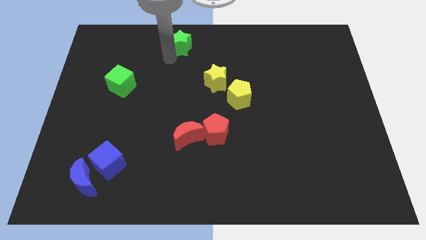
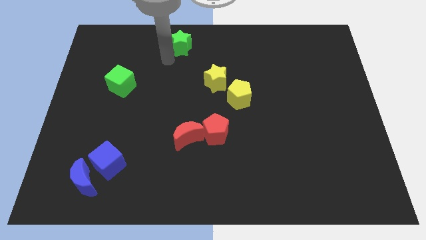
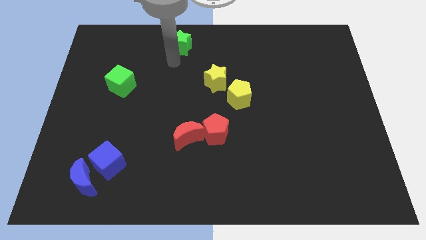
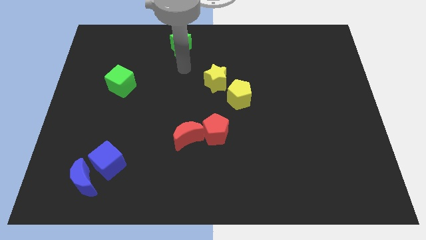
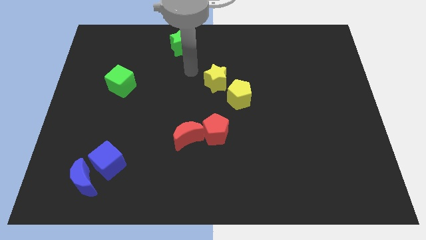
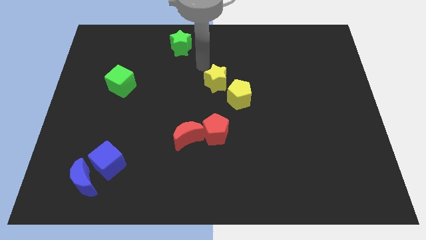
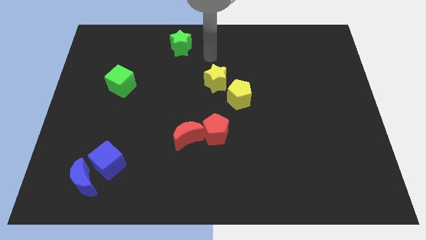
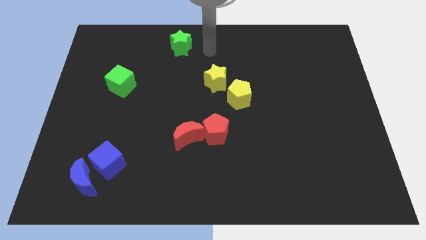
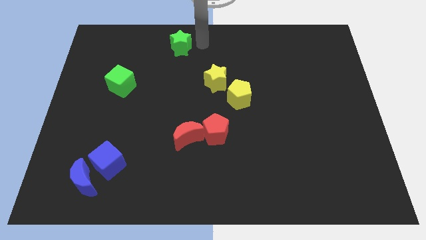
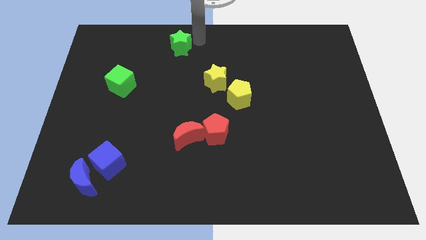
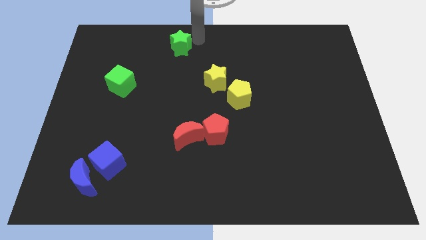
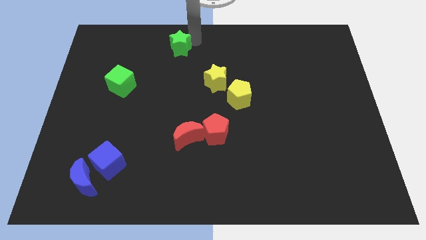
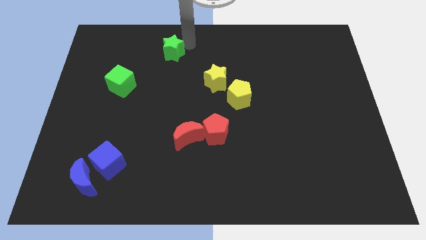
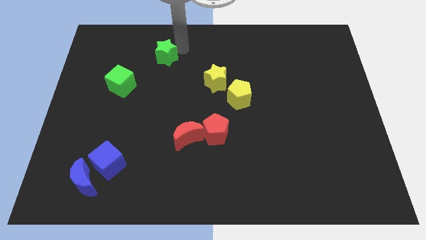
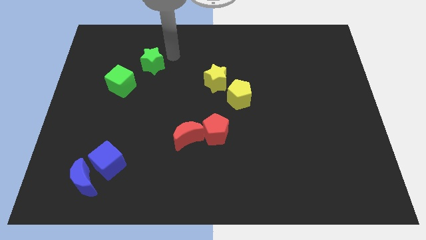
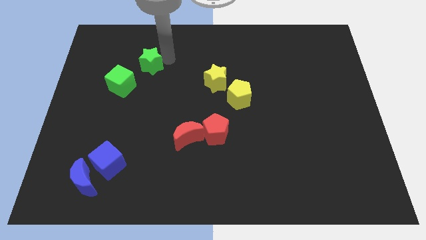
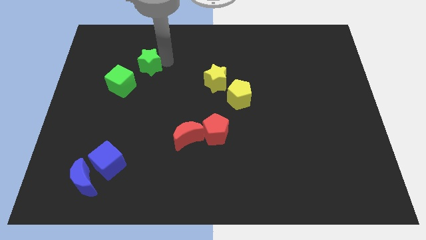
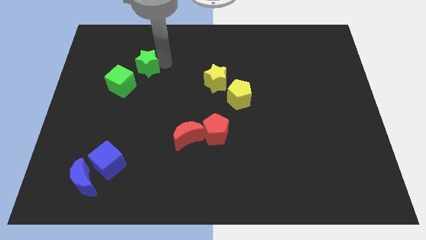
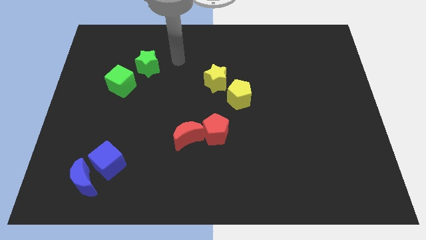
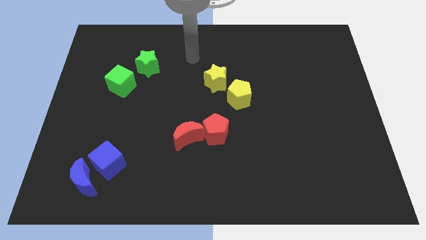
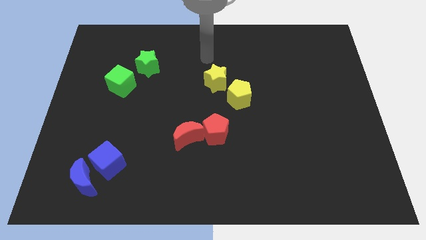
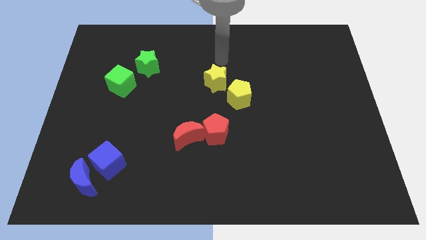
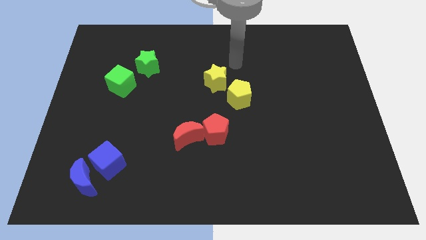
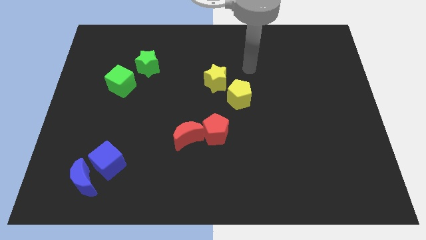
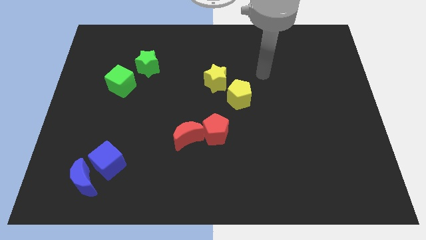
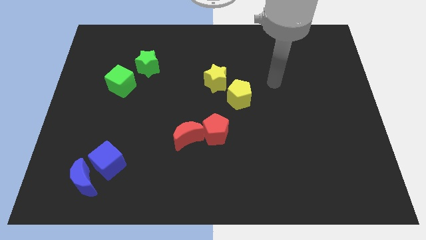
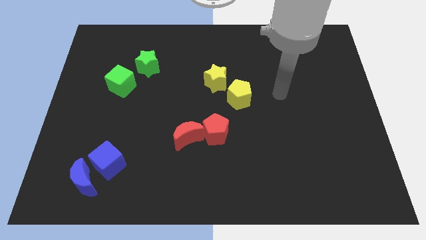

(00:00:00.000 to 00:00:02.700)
place the green star to the top right of the green cube

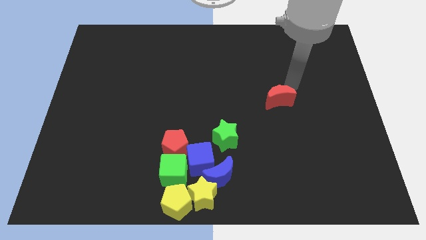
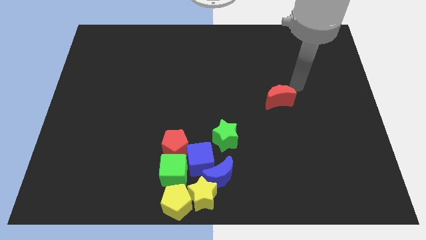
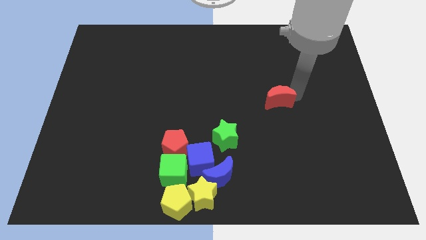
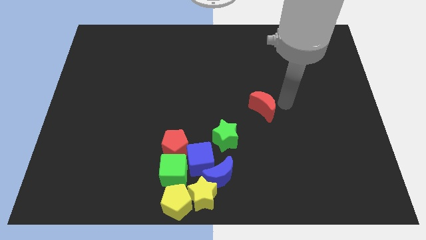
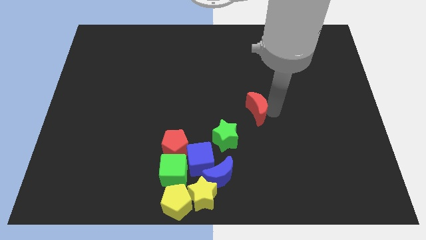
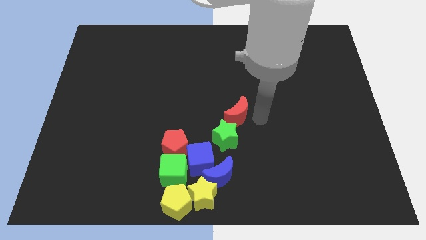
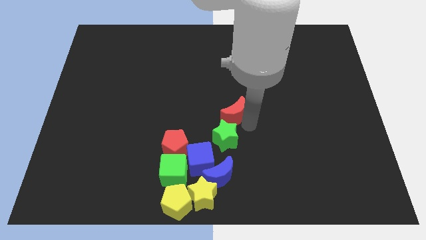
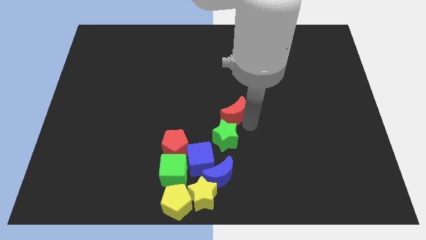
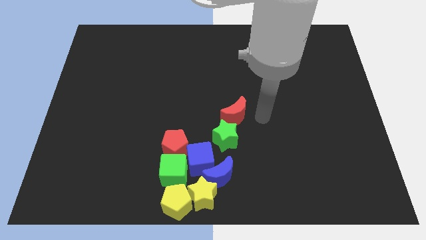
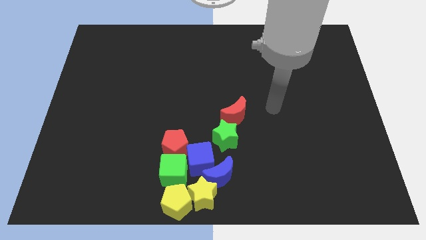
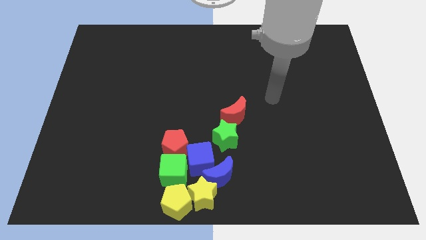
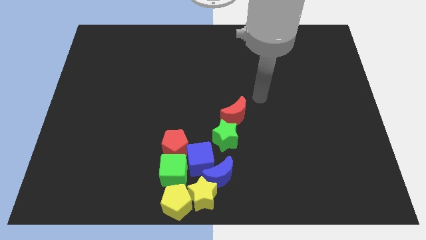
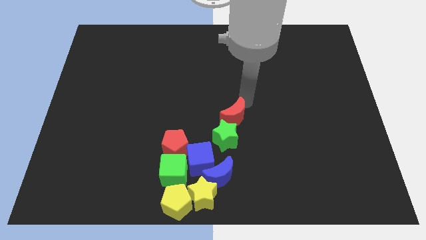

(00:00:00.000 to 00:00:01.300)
place the red moon above the green star

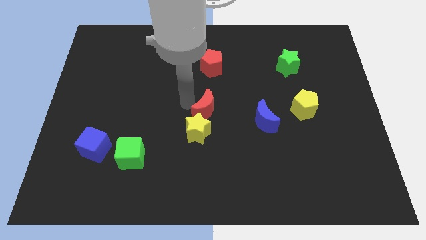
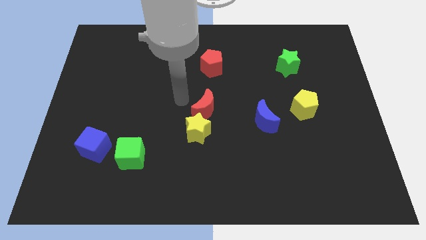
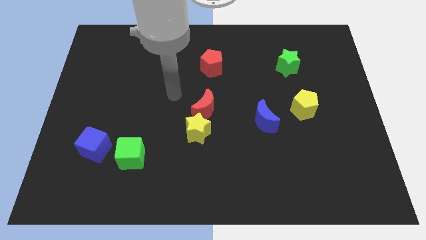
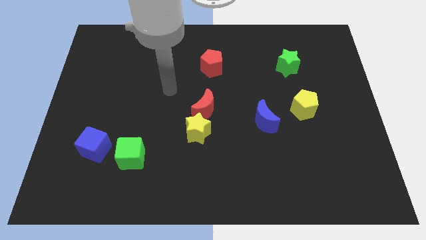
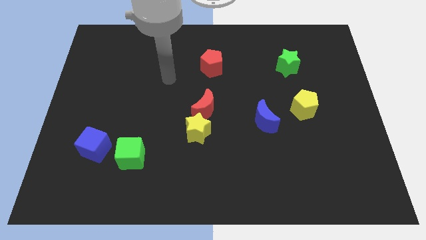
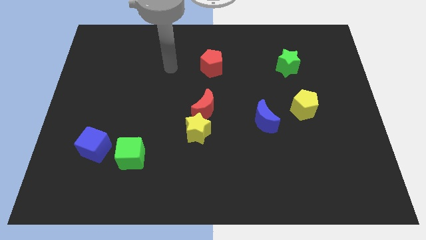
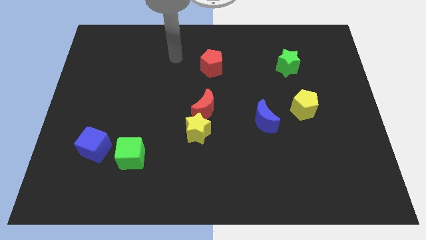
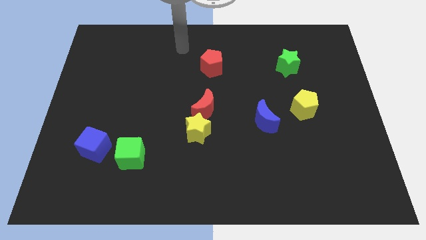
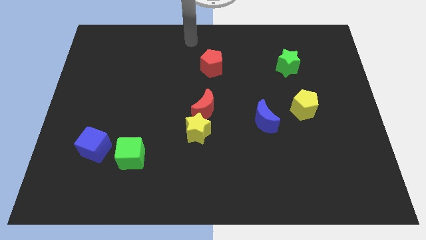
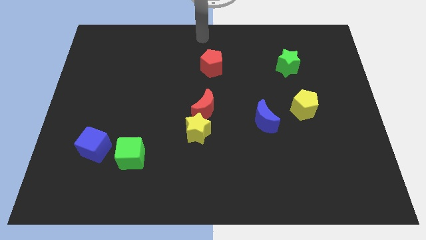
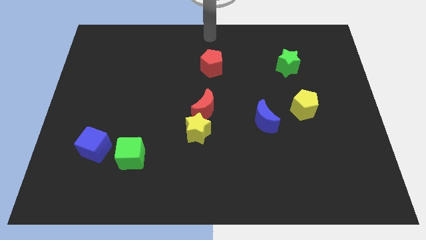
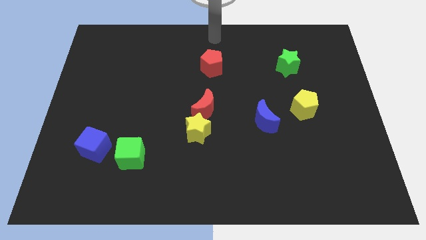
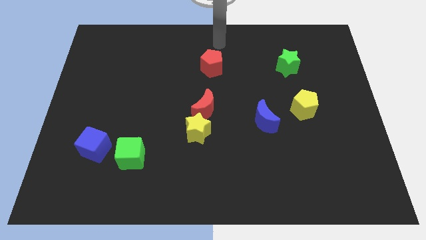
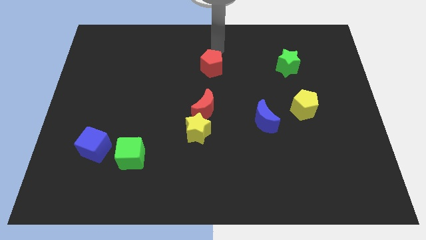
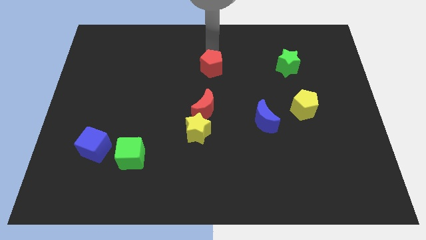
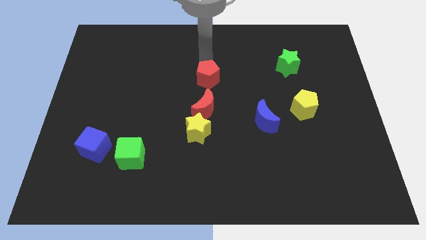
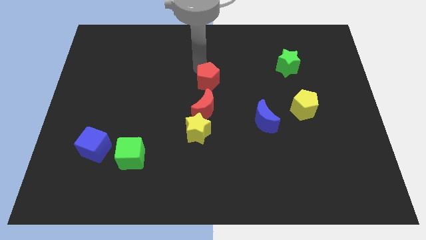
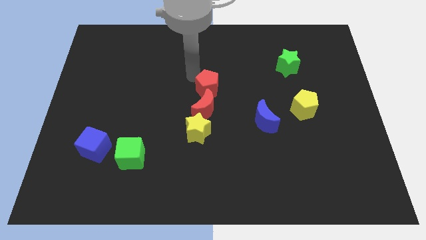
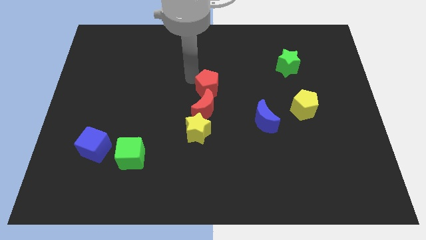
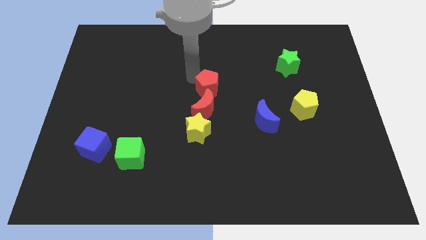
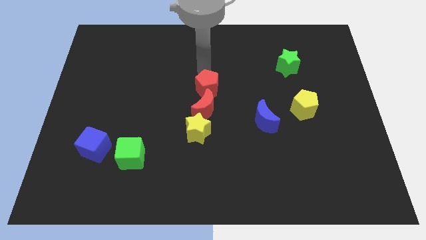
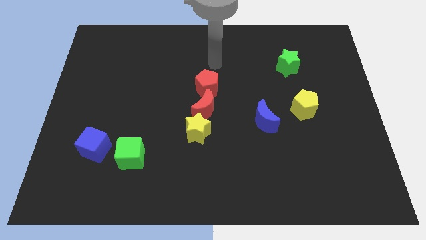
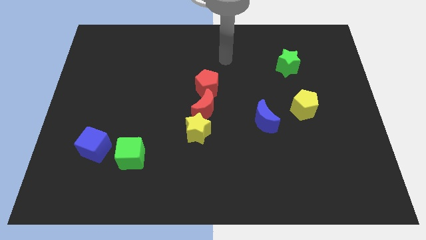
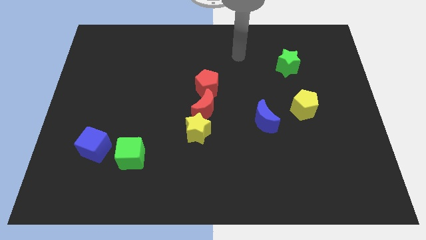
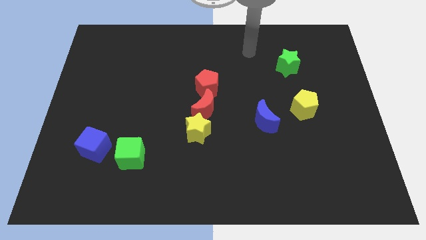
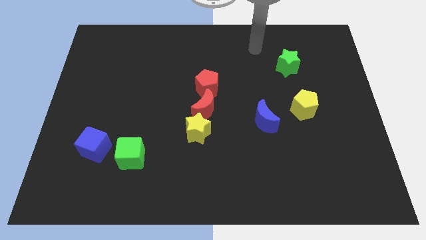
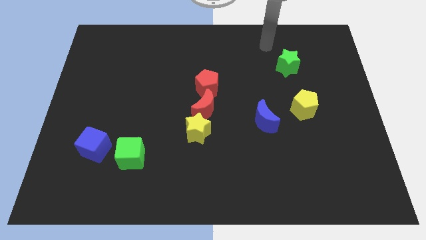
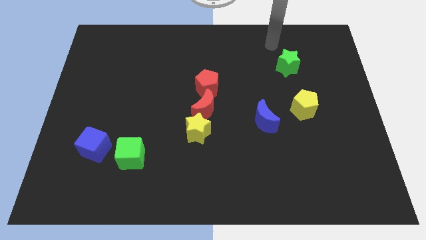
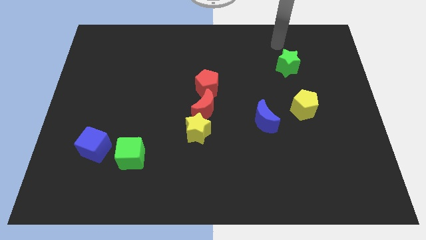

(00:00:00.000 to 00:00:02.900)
place the red pentagon above the red moon

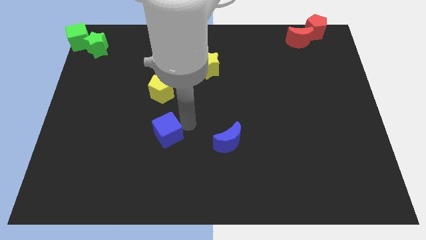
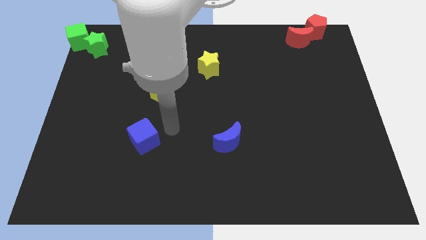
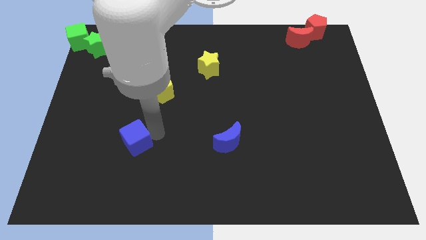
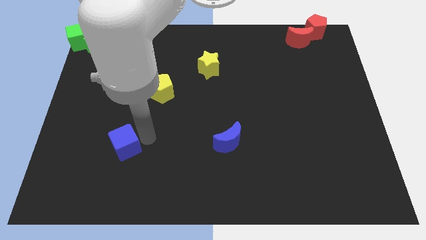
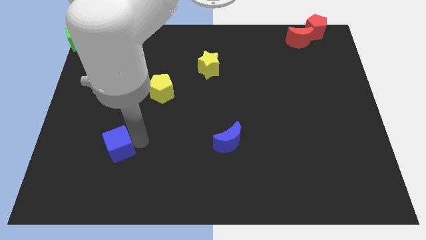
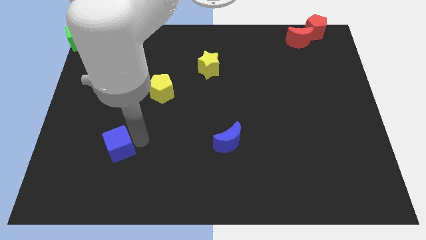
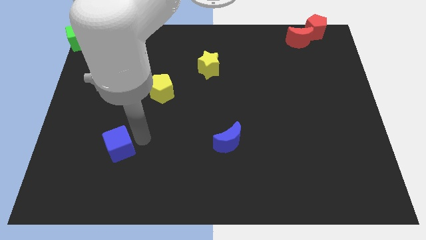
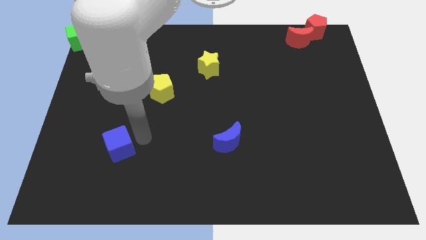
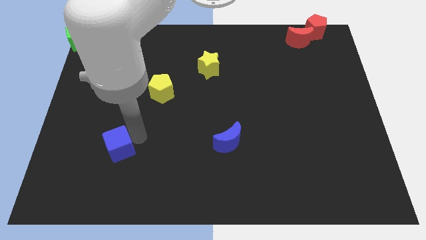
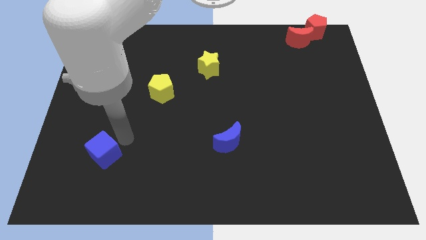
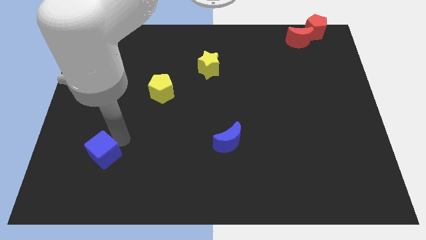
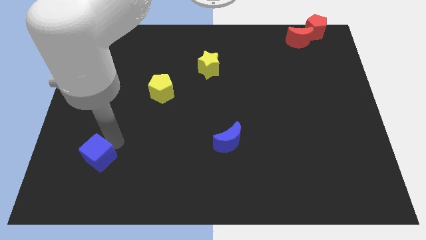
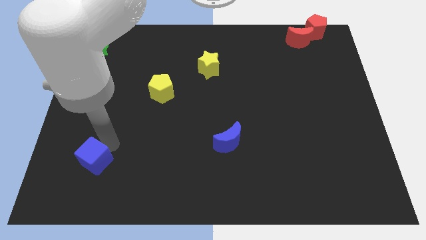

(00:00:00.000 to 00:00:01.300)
move the blue cube towards the left bottom of the board

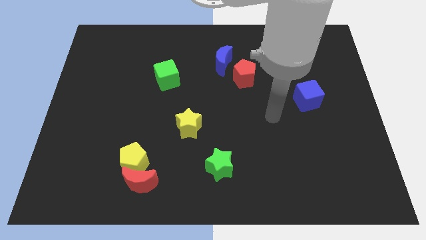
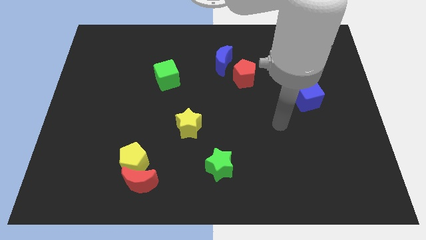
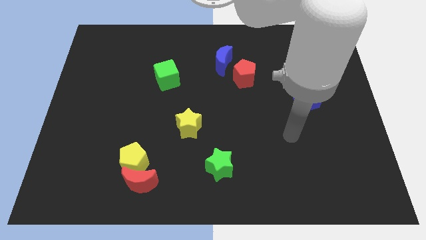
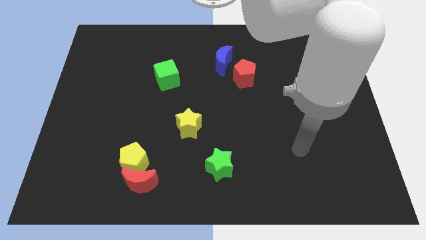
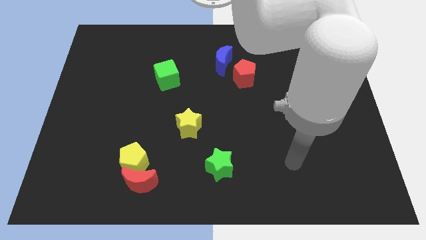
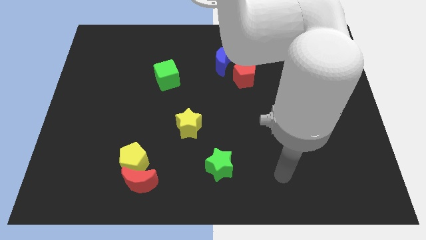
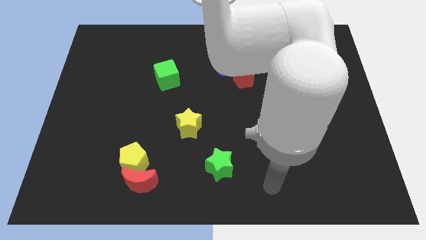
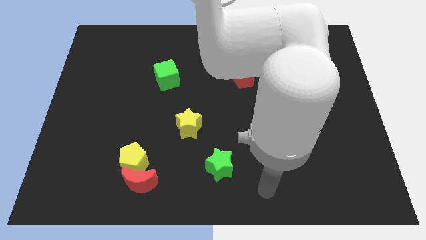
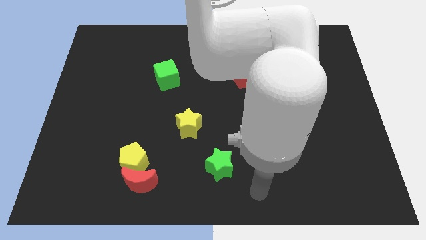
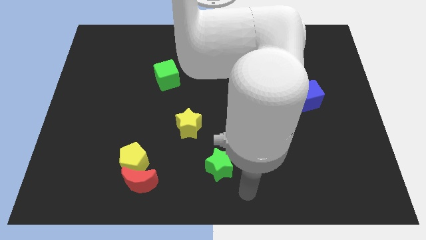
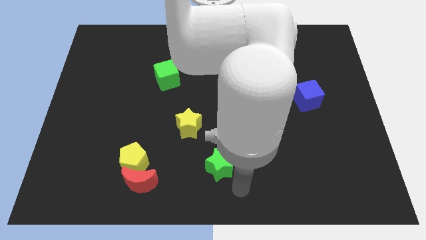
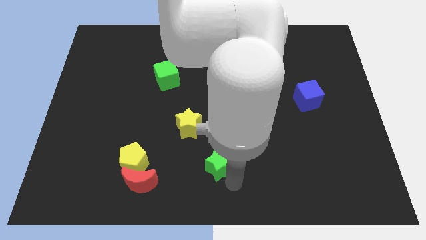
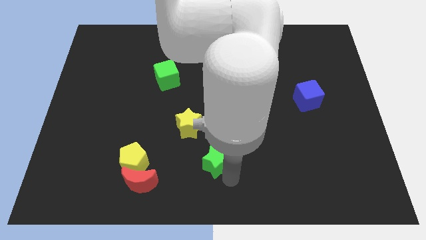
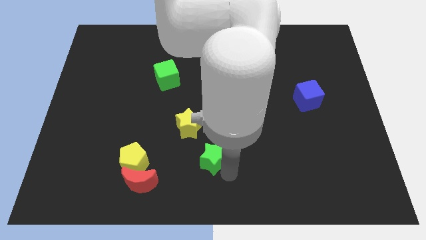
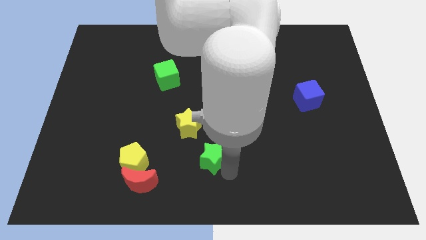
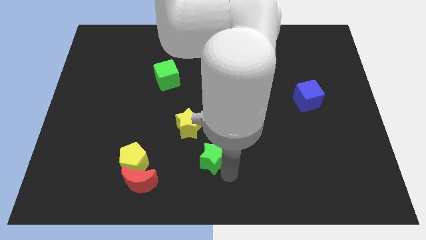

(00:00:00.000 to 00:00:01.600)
place the arm diagonally to the green star
